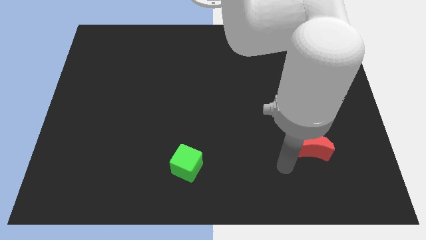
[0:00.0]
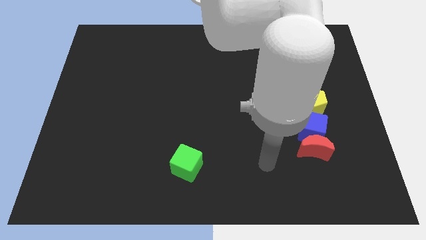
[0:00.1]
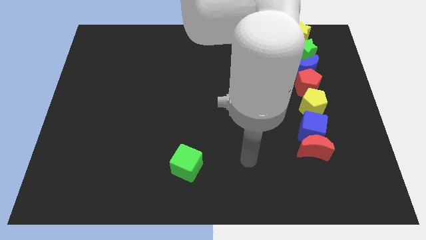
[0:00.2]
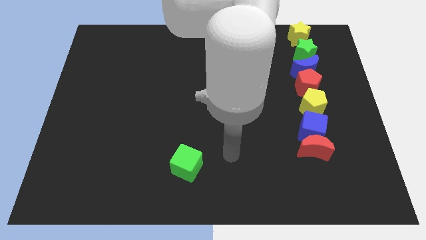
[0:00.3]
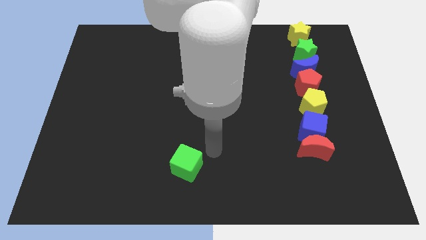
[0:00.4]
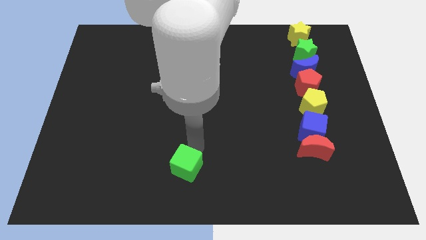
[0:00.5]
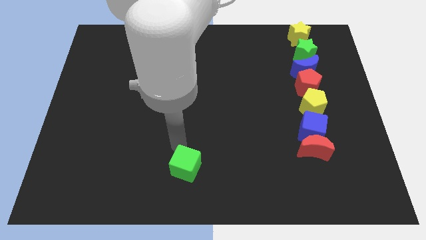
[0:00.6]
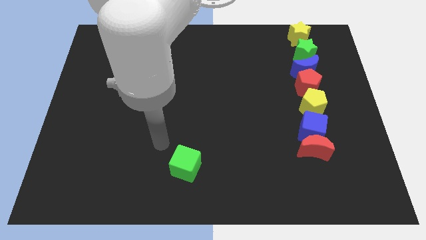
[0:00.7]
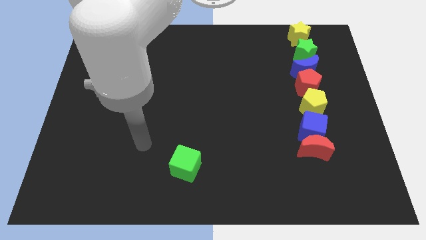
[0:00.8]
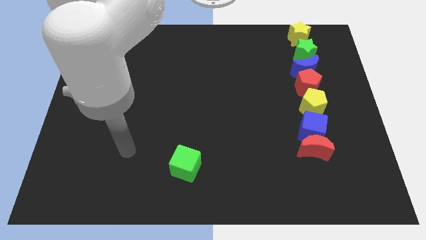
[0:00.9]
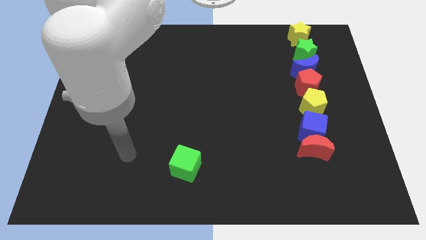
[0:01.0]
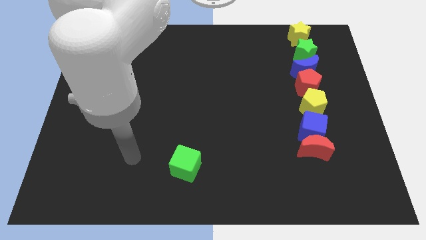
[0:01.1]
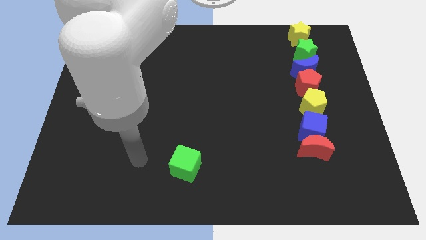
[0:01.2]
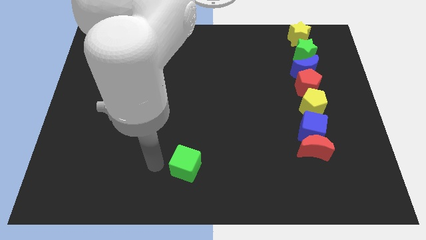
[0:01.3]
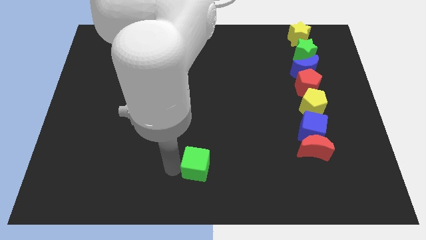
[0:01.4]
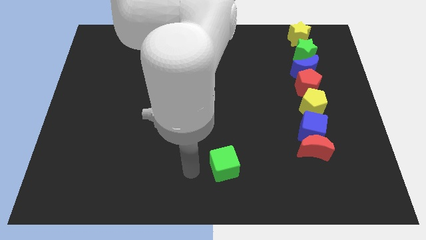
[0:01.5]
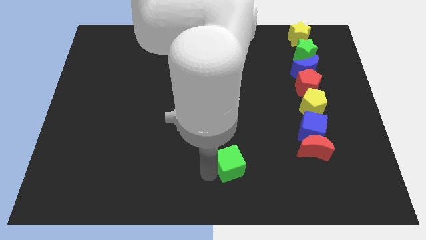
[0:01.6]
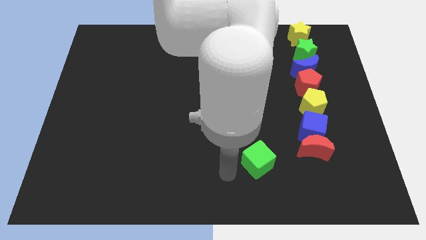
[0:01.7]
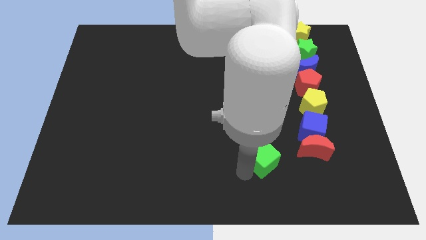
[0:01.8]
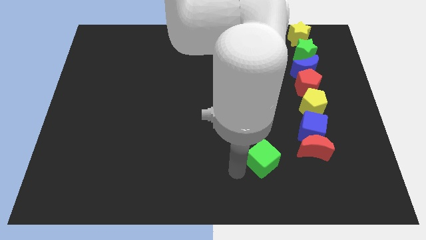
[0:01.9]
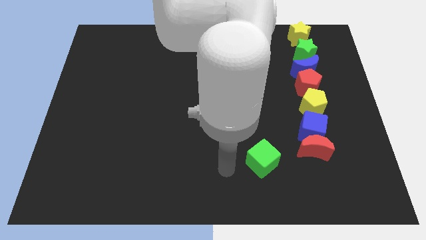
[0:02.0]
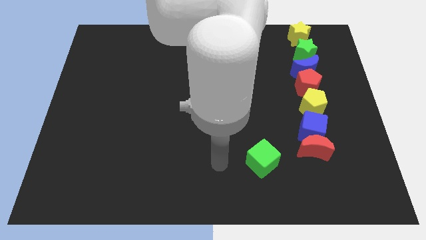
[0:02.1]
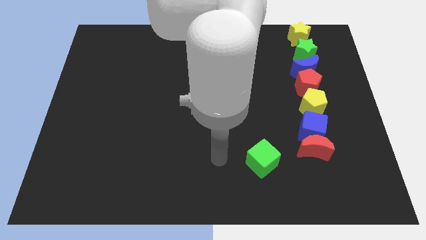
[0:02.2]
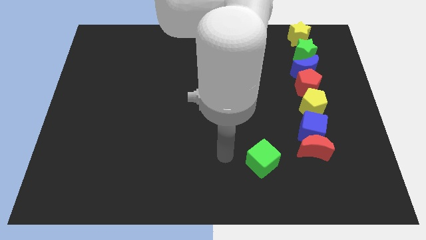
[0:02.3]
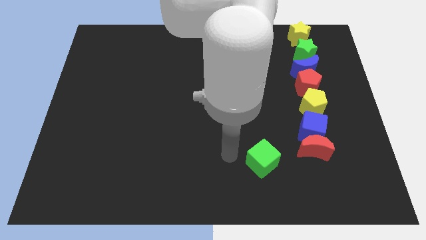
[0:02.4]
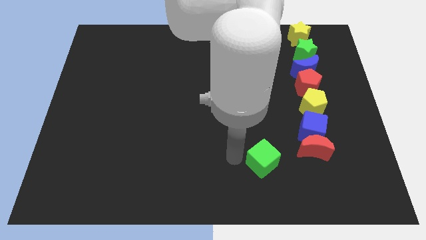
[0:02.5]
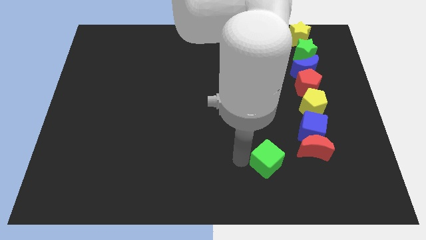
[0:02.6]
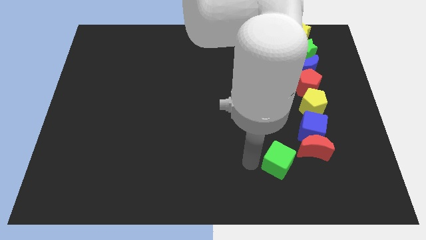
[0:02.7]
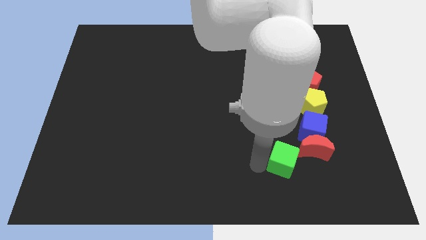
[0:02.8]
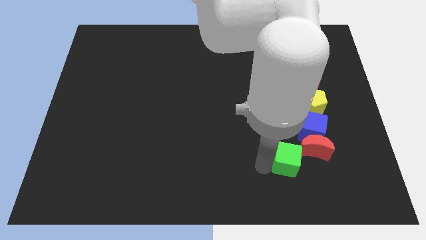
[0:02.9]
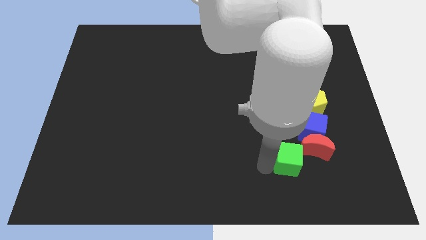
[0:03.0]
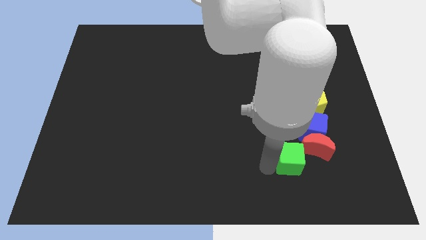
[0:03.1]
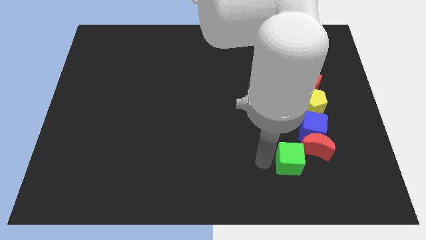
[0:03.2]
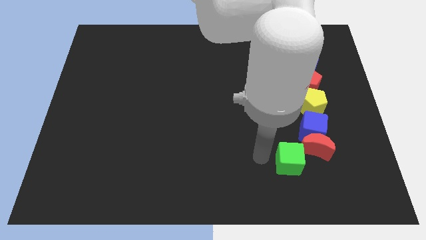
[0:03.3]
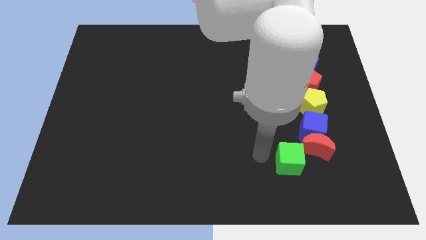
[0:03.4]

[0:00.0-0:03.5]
push the green cube to the right side of the board

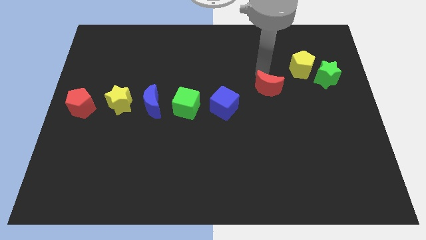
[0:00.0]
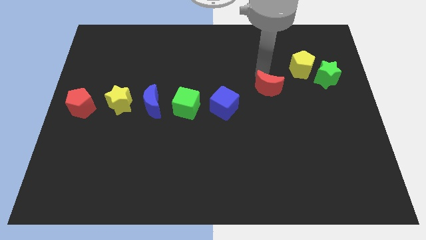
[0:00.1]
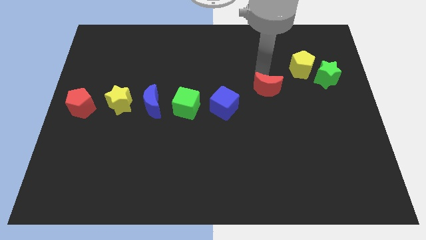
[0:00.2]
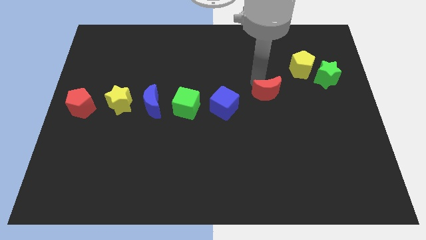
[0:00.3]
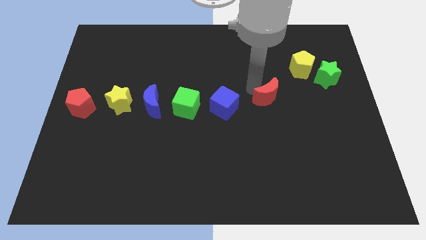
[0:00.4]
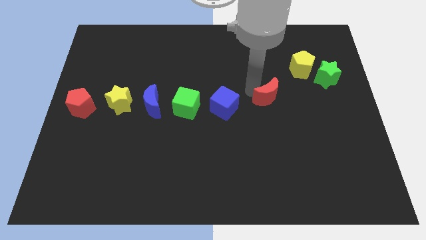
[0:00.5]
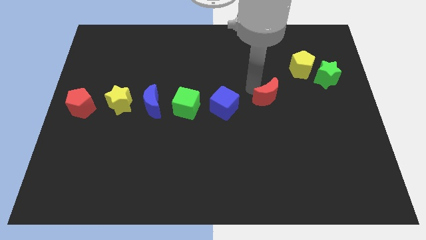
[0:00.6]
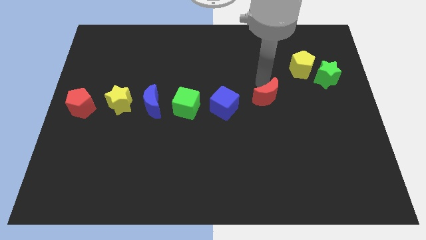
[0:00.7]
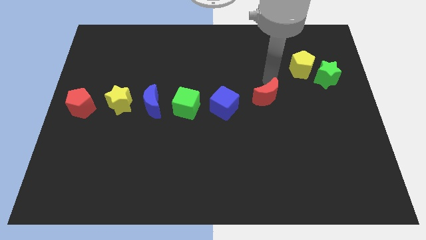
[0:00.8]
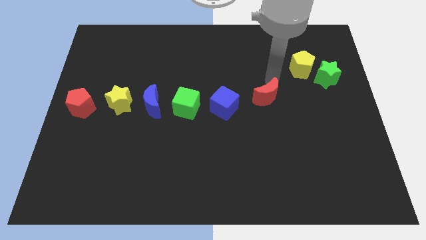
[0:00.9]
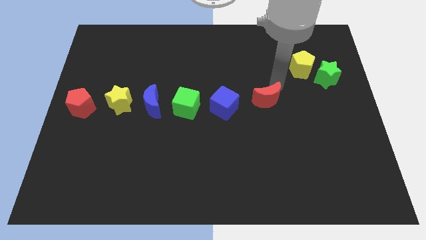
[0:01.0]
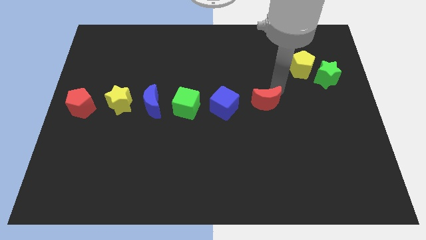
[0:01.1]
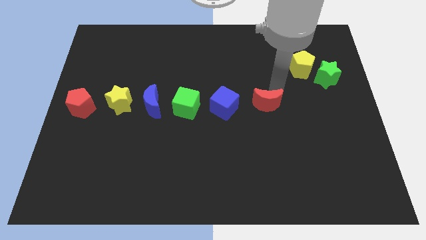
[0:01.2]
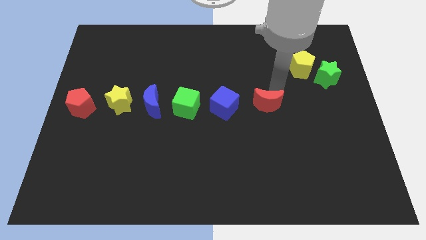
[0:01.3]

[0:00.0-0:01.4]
place the red moon to the right side of the blue cube

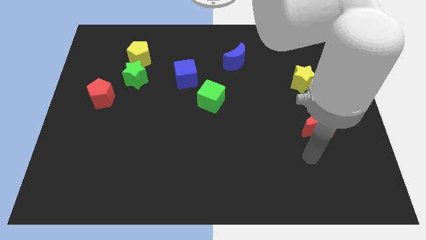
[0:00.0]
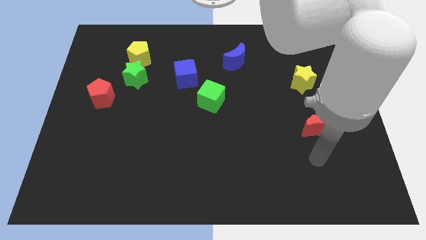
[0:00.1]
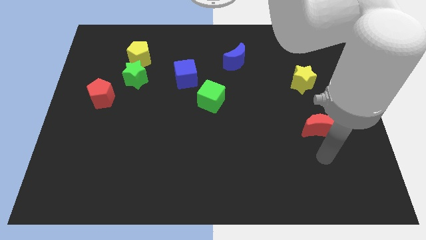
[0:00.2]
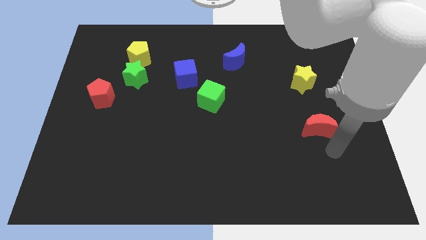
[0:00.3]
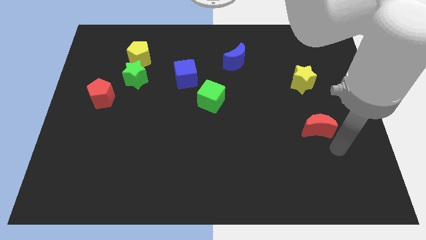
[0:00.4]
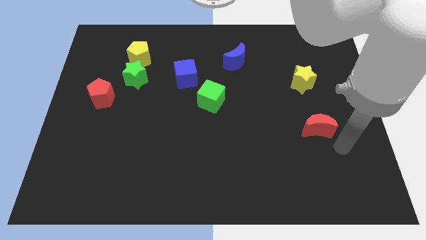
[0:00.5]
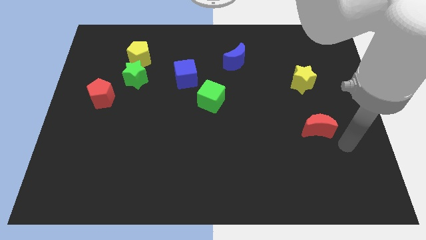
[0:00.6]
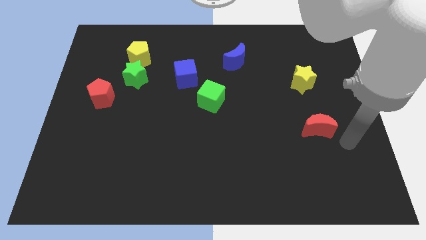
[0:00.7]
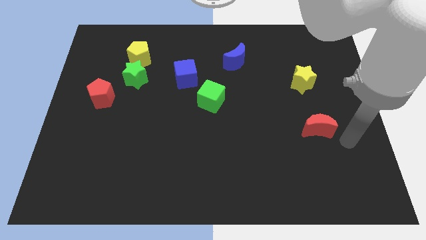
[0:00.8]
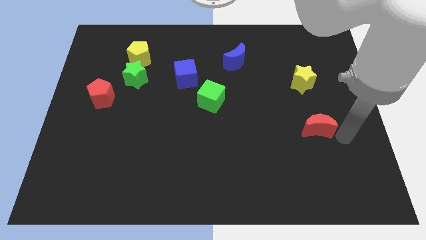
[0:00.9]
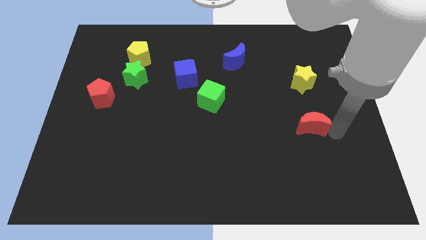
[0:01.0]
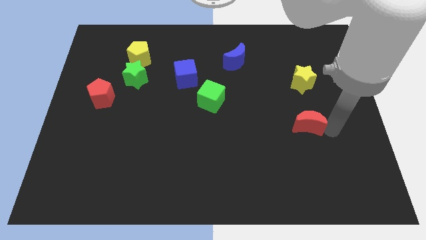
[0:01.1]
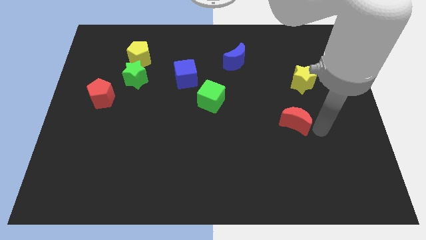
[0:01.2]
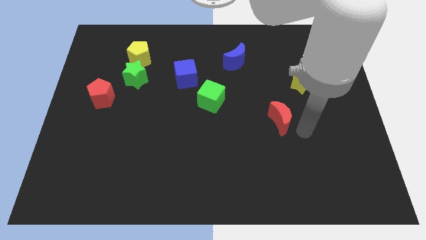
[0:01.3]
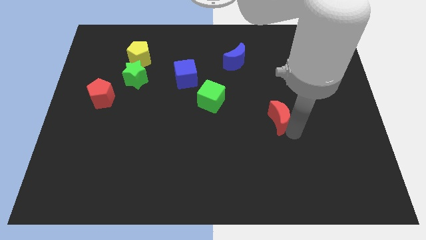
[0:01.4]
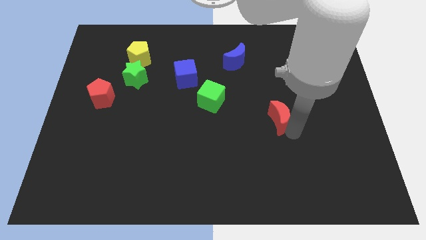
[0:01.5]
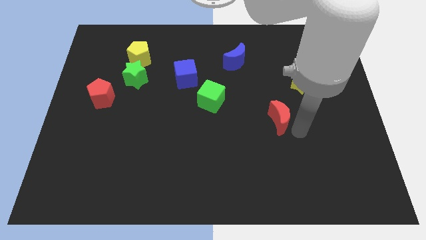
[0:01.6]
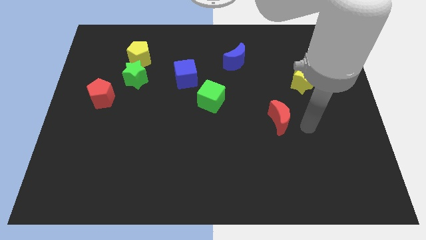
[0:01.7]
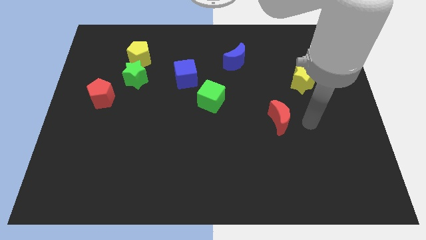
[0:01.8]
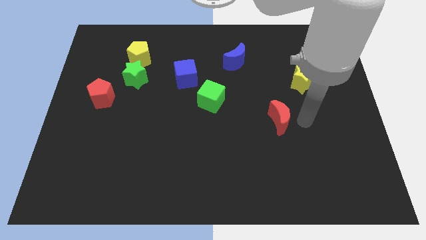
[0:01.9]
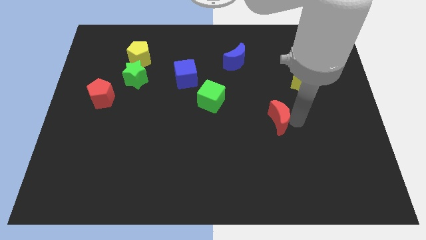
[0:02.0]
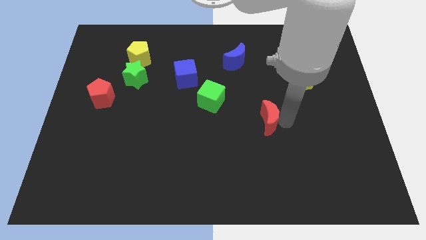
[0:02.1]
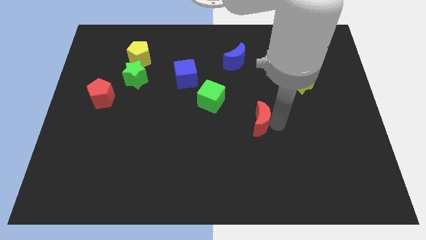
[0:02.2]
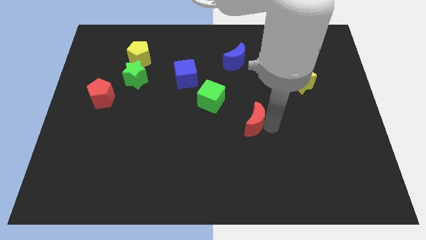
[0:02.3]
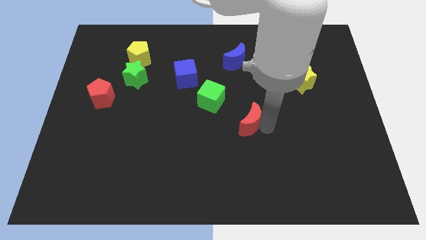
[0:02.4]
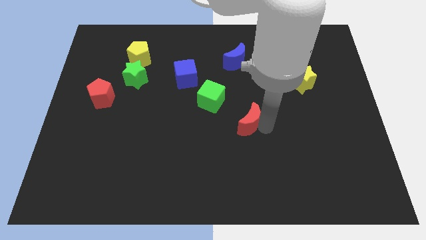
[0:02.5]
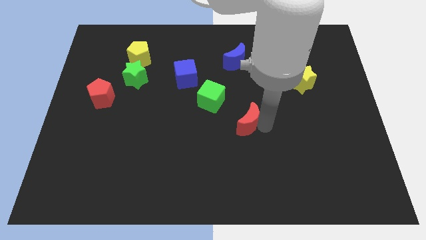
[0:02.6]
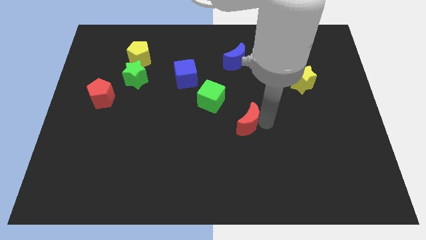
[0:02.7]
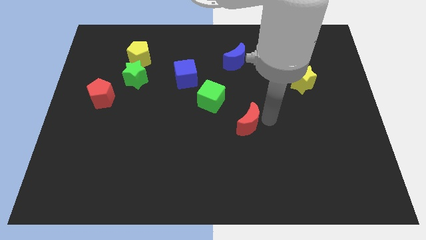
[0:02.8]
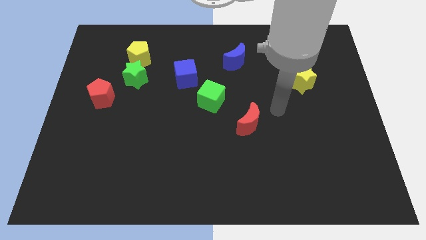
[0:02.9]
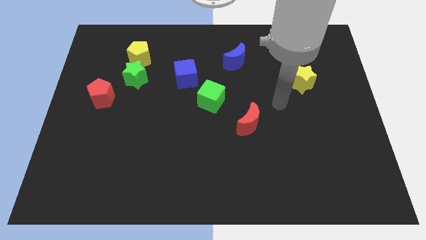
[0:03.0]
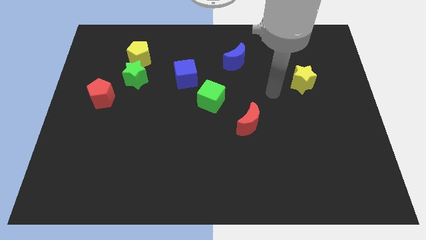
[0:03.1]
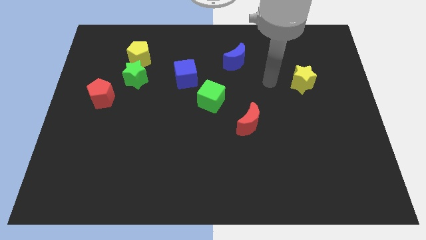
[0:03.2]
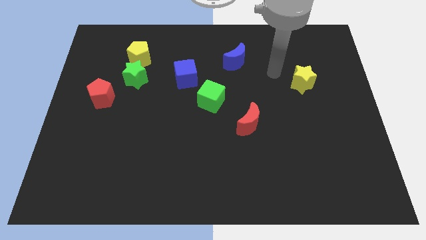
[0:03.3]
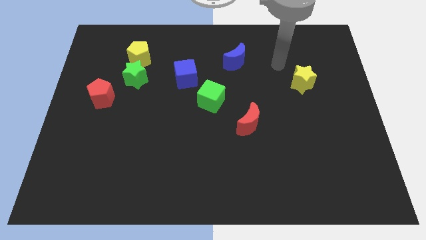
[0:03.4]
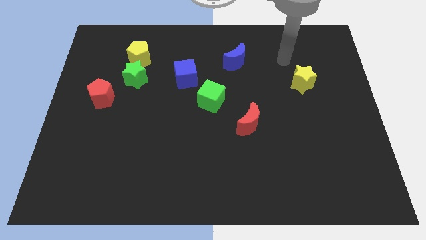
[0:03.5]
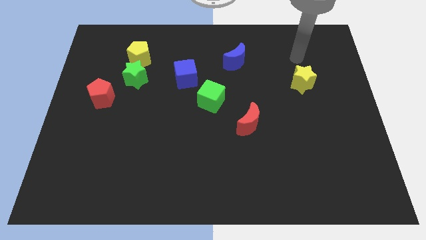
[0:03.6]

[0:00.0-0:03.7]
push the red crescent diagonally to the bottom right of green cube

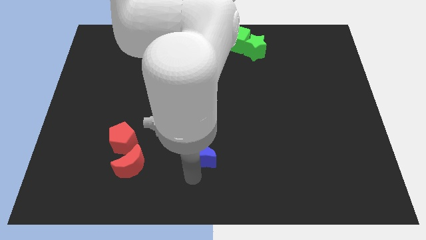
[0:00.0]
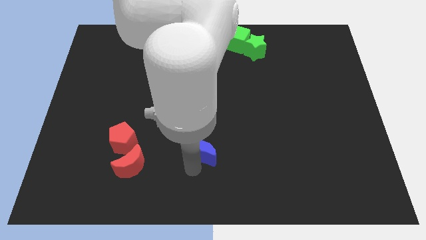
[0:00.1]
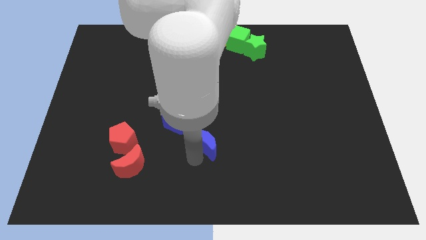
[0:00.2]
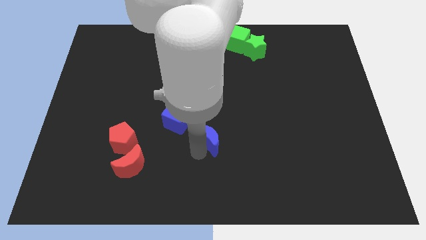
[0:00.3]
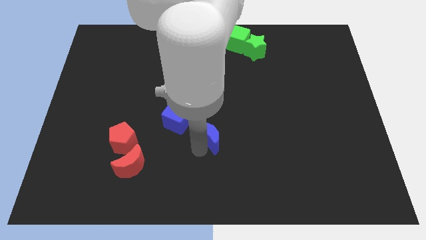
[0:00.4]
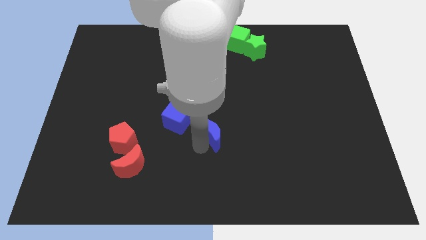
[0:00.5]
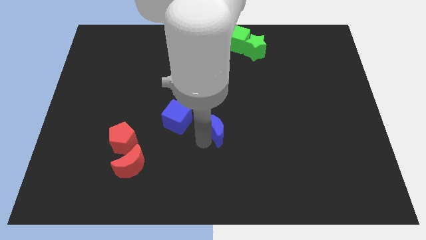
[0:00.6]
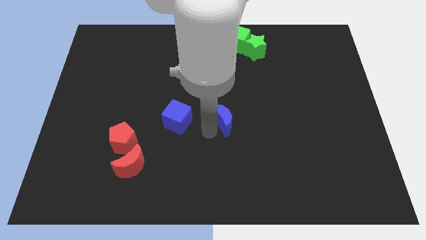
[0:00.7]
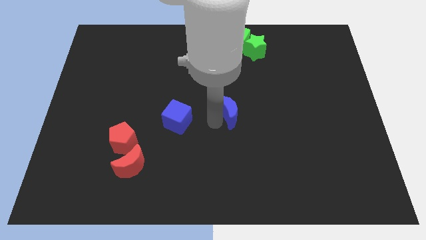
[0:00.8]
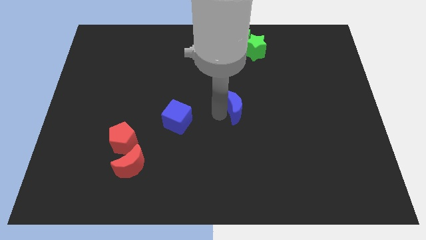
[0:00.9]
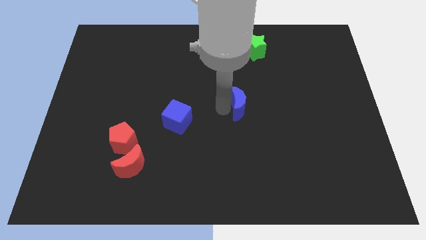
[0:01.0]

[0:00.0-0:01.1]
push the blue crescent to the center of the board
